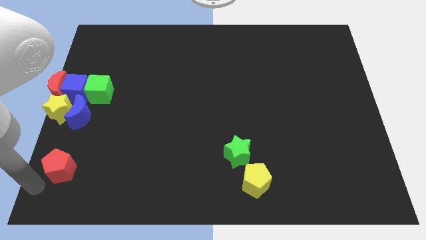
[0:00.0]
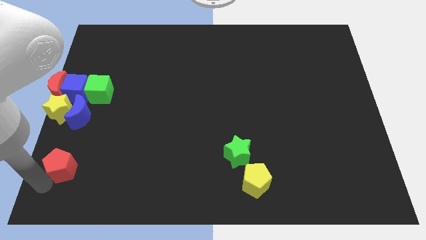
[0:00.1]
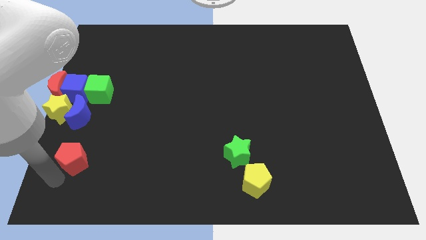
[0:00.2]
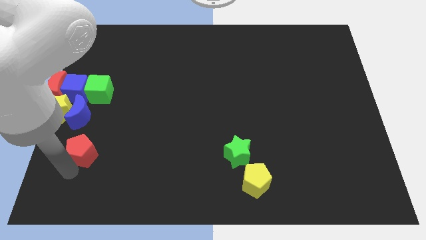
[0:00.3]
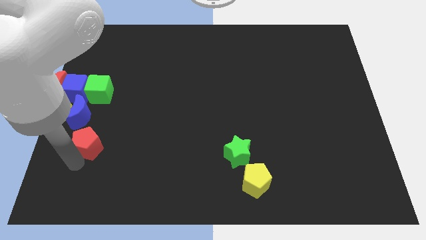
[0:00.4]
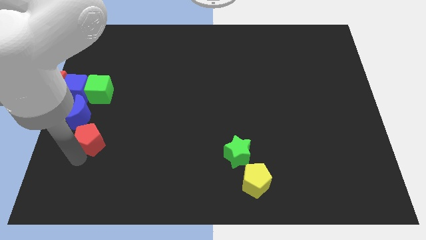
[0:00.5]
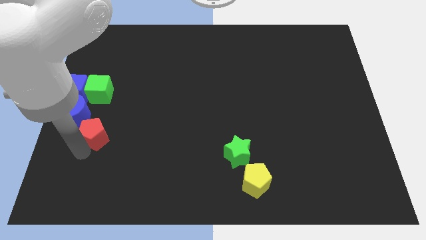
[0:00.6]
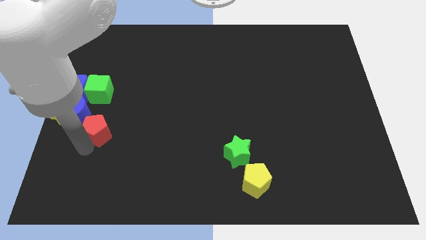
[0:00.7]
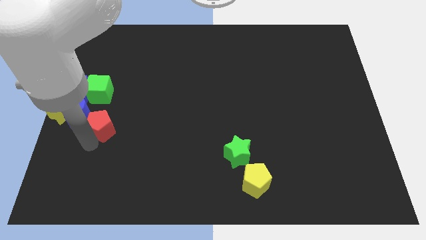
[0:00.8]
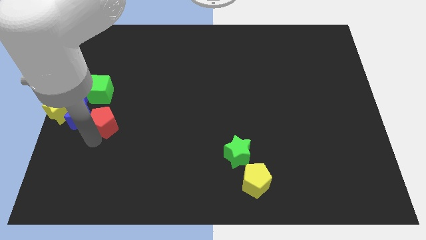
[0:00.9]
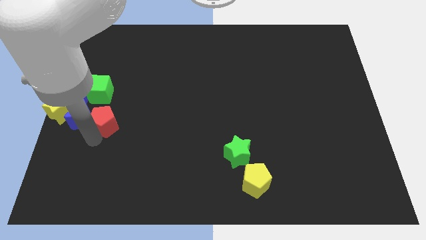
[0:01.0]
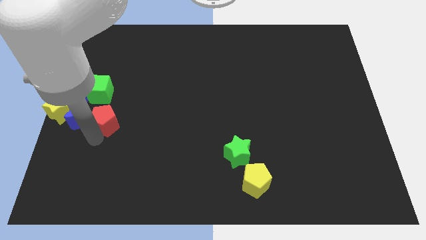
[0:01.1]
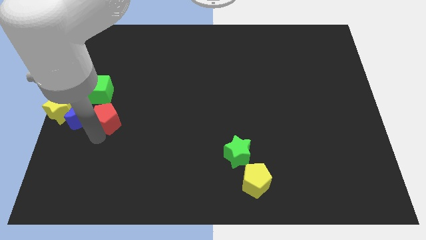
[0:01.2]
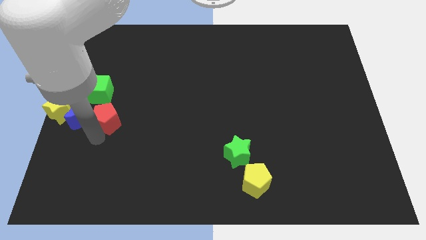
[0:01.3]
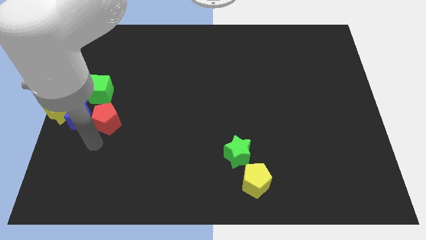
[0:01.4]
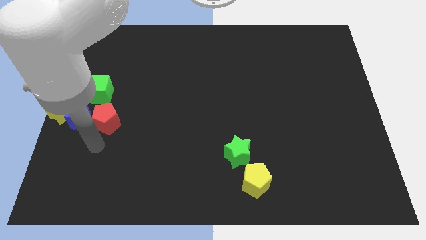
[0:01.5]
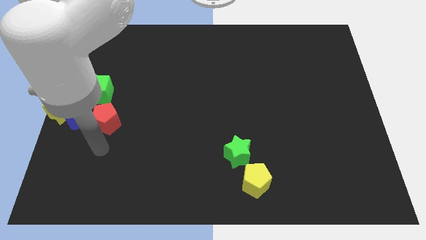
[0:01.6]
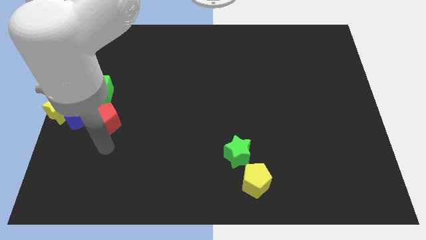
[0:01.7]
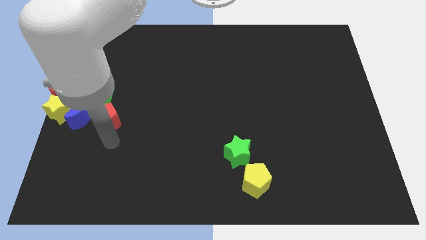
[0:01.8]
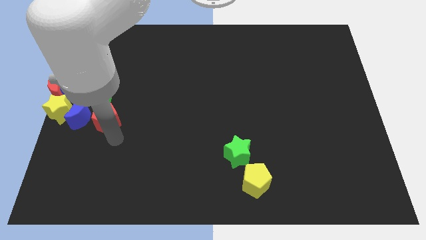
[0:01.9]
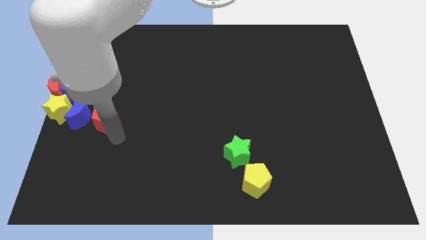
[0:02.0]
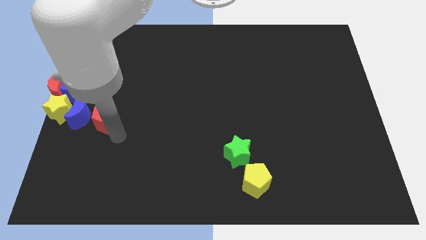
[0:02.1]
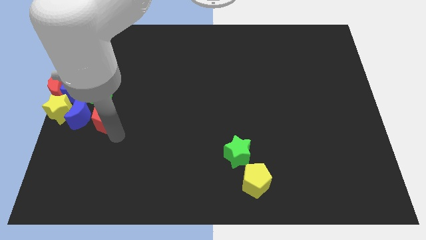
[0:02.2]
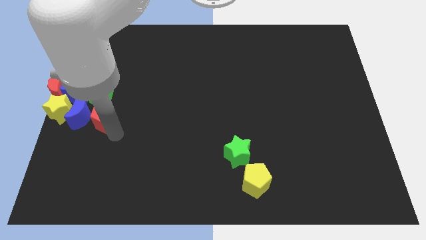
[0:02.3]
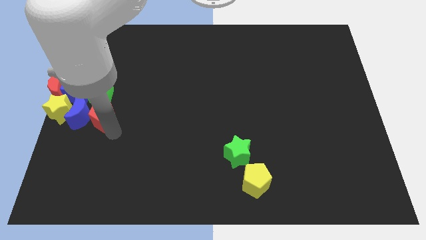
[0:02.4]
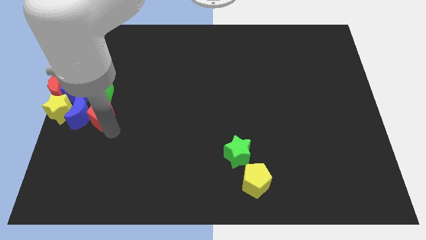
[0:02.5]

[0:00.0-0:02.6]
place red pentagon below green cube

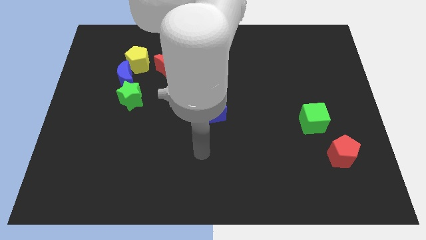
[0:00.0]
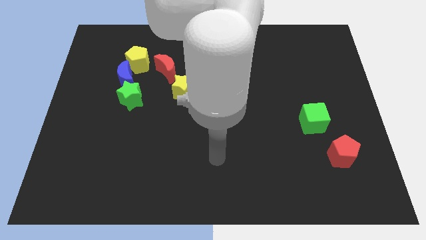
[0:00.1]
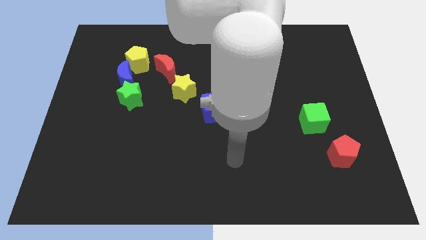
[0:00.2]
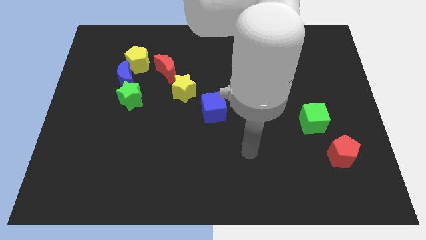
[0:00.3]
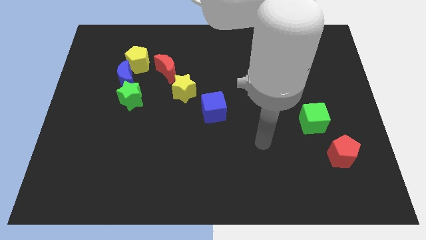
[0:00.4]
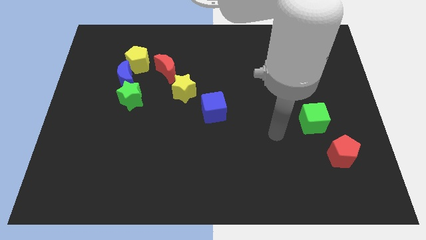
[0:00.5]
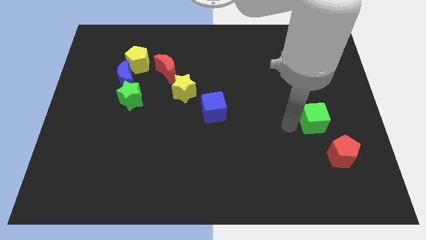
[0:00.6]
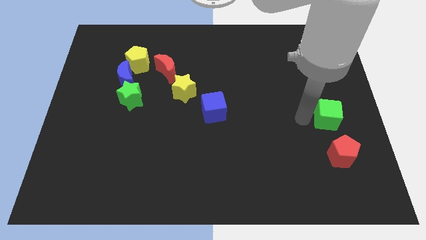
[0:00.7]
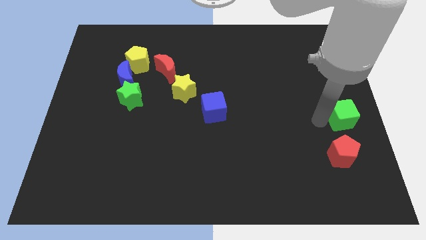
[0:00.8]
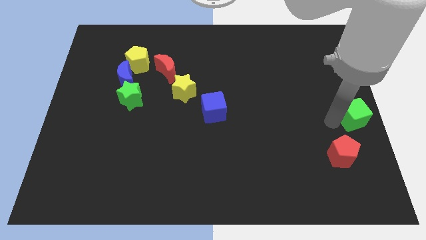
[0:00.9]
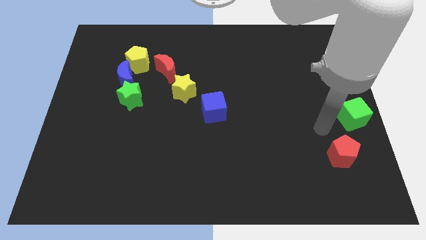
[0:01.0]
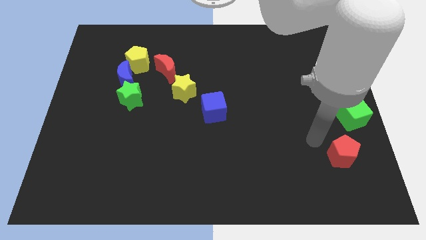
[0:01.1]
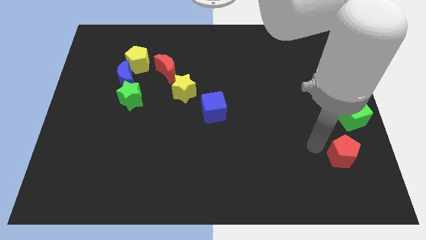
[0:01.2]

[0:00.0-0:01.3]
push the green cube to the center right of the board

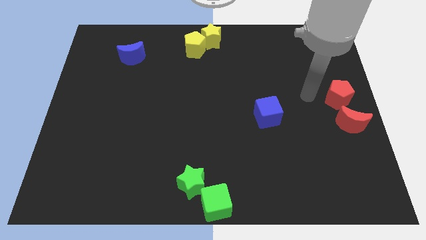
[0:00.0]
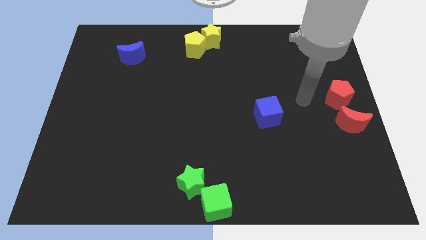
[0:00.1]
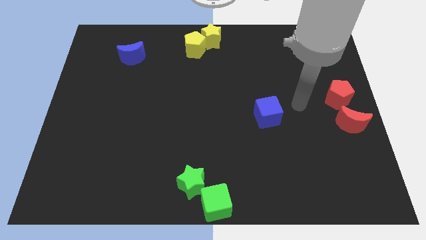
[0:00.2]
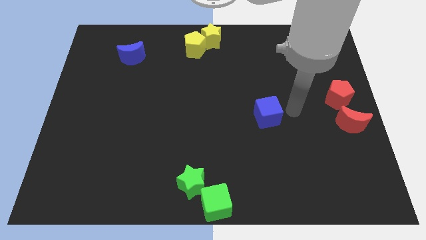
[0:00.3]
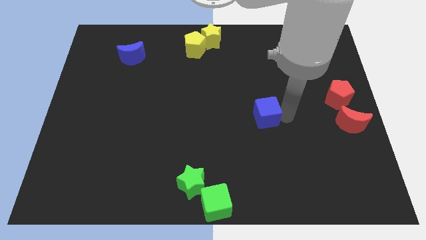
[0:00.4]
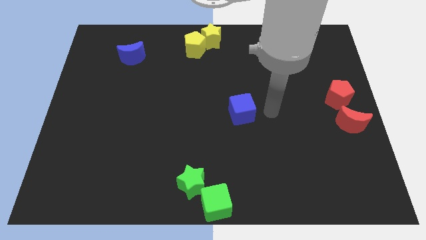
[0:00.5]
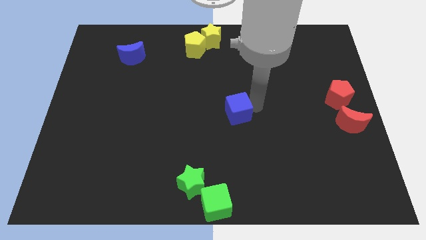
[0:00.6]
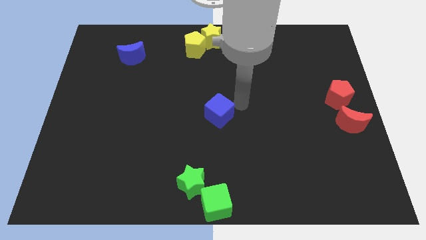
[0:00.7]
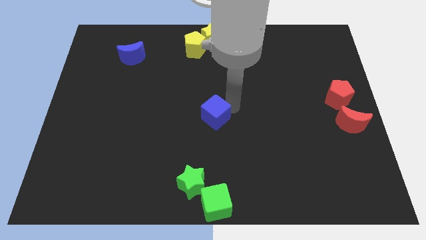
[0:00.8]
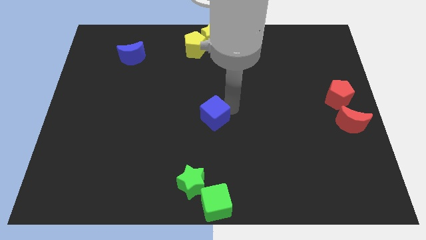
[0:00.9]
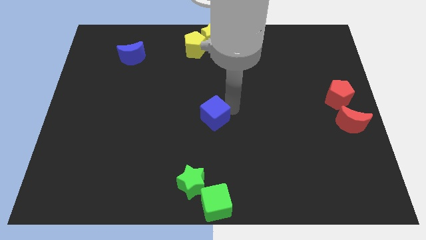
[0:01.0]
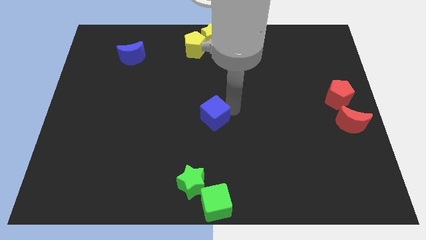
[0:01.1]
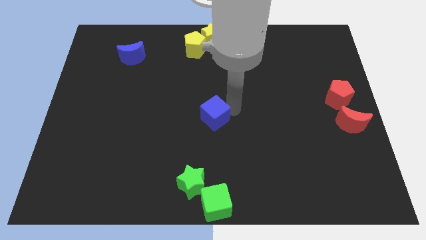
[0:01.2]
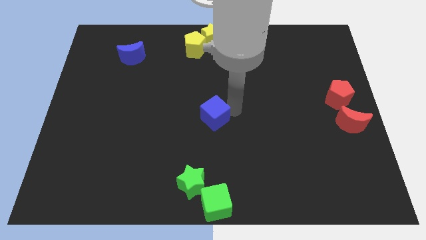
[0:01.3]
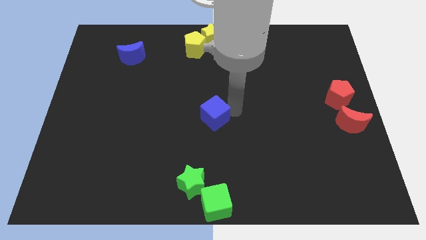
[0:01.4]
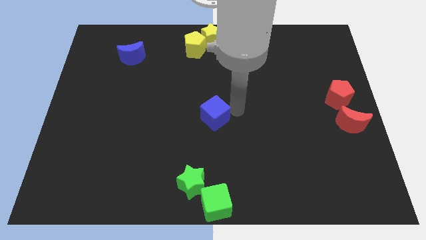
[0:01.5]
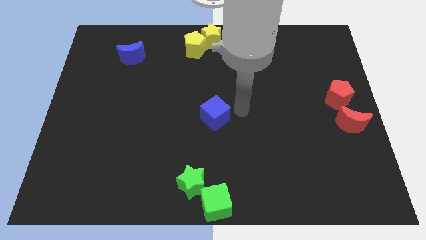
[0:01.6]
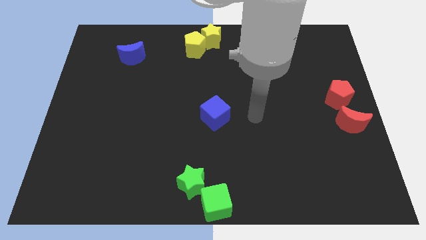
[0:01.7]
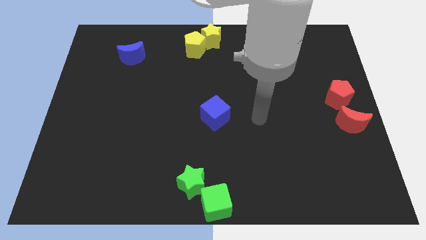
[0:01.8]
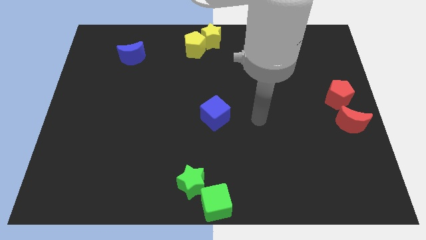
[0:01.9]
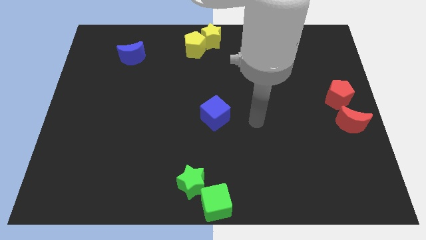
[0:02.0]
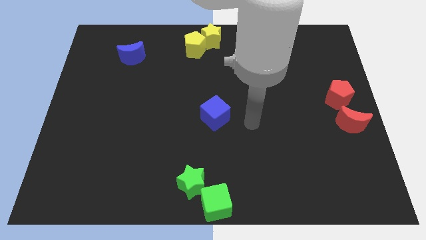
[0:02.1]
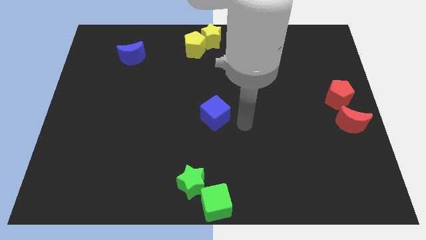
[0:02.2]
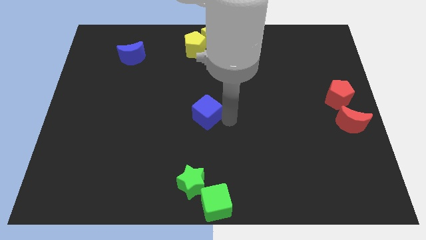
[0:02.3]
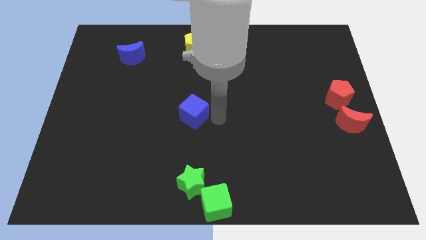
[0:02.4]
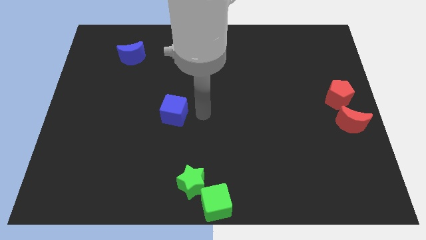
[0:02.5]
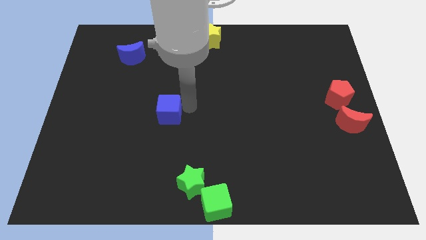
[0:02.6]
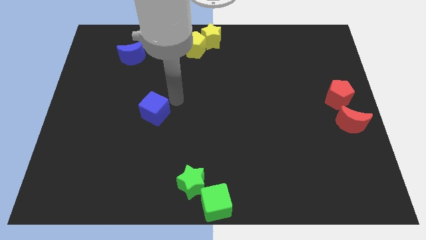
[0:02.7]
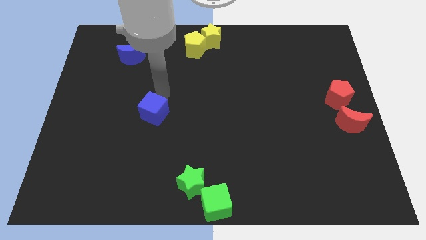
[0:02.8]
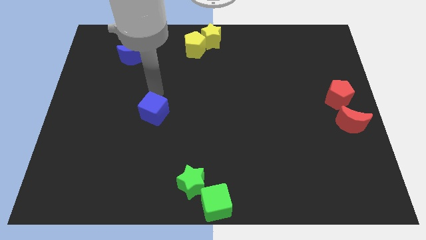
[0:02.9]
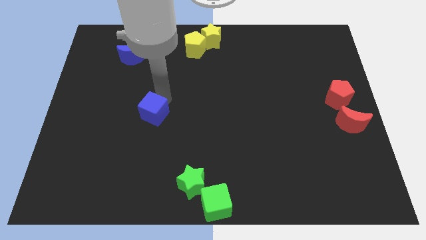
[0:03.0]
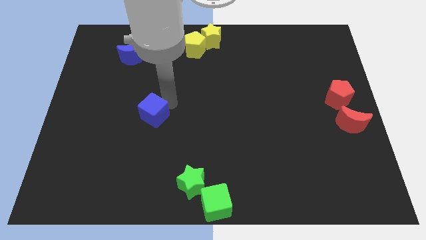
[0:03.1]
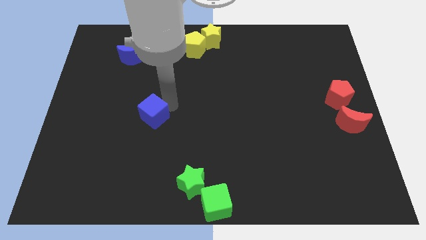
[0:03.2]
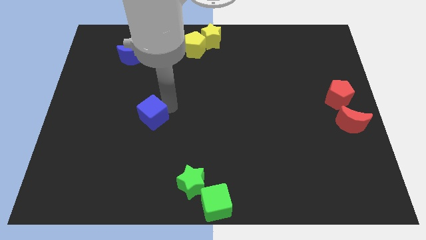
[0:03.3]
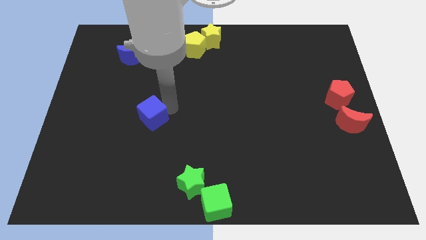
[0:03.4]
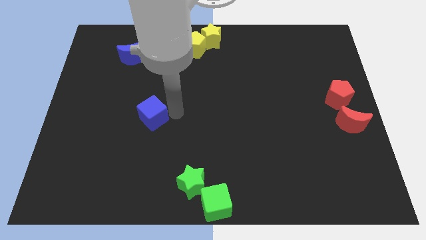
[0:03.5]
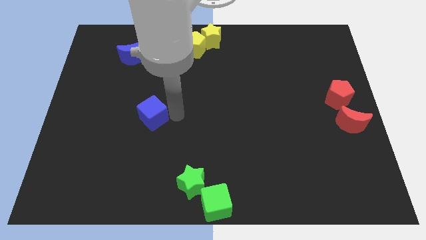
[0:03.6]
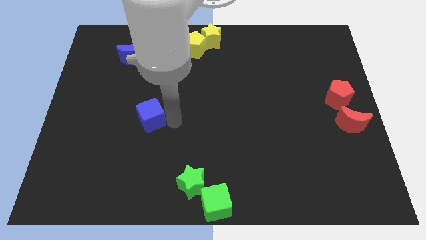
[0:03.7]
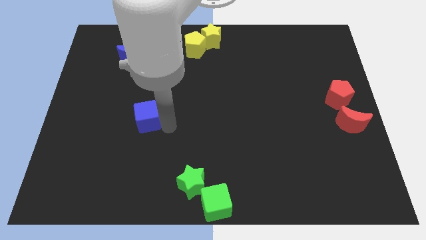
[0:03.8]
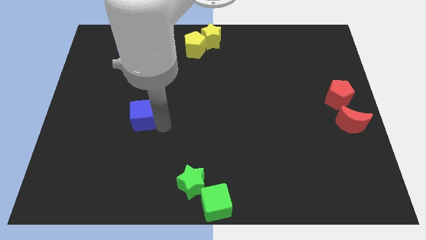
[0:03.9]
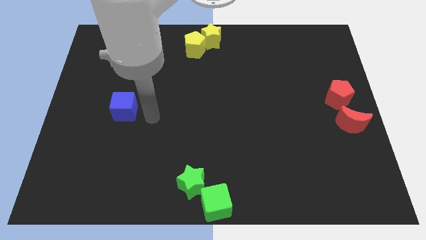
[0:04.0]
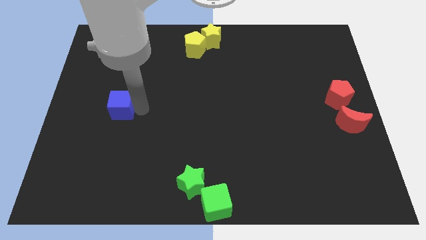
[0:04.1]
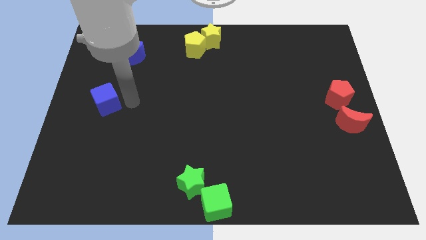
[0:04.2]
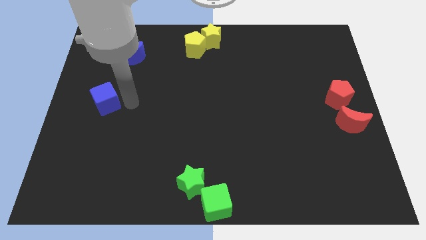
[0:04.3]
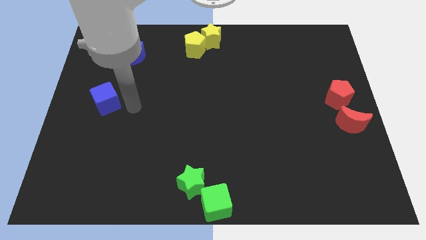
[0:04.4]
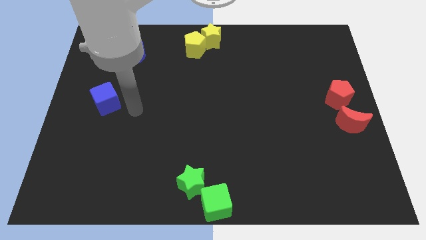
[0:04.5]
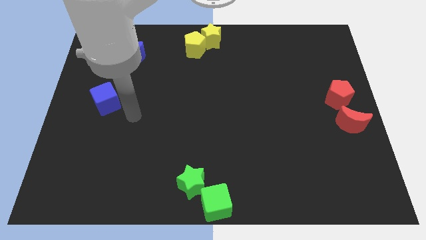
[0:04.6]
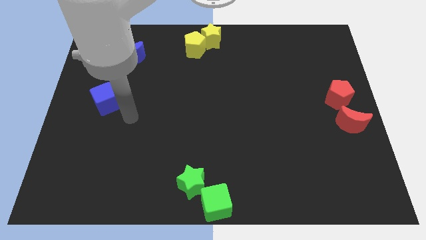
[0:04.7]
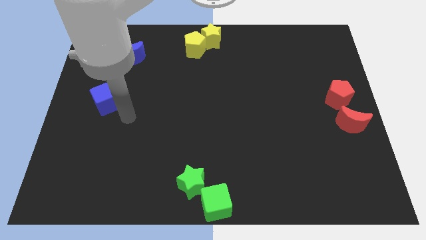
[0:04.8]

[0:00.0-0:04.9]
push the blue cube to the left of the board
